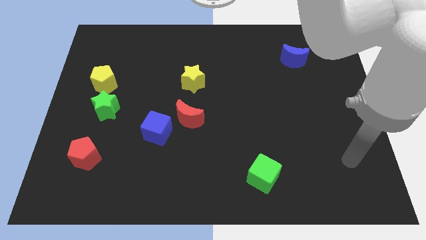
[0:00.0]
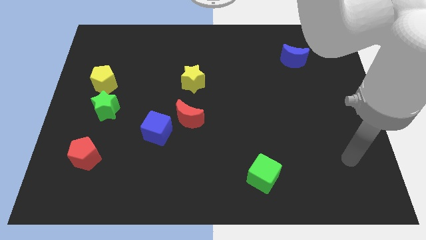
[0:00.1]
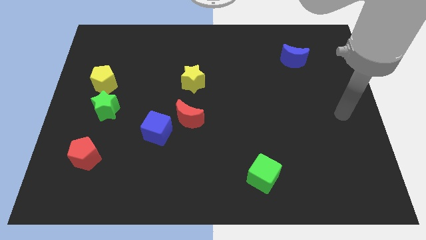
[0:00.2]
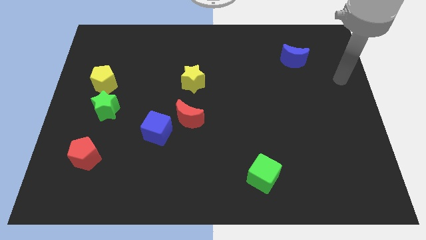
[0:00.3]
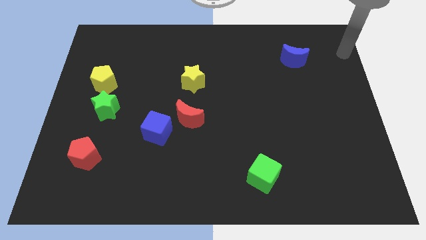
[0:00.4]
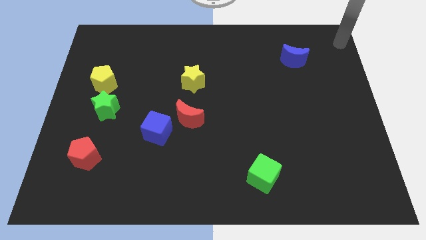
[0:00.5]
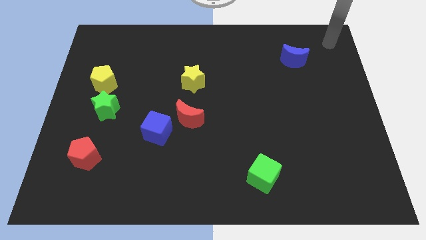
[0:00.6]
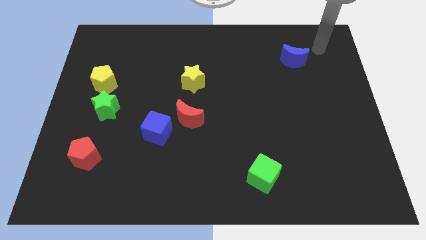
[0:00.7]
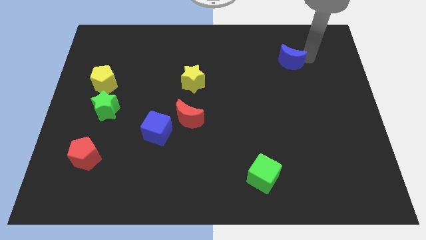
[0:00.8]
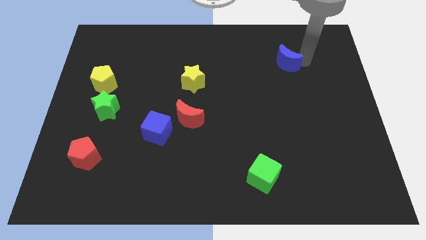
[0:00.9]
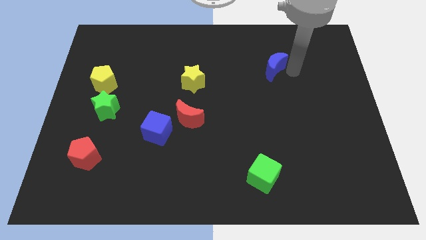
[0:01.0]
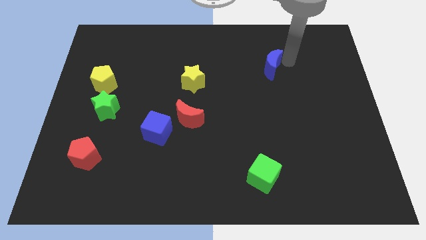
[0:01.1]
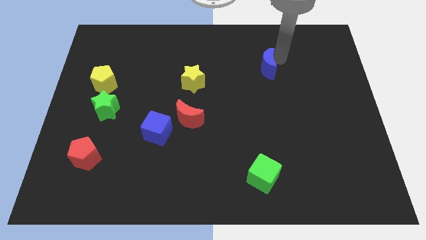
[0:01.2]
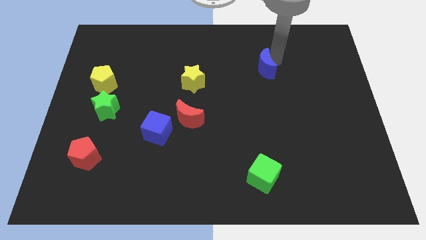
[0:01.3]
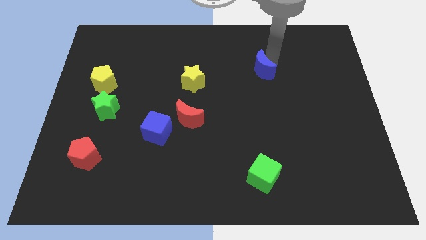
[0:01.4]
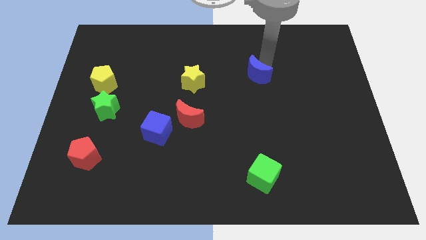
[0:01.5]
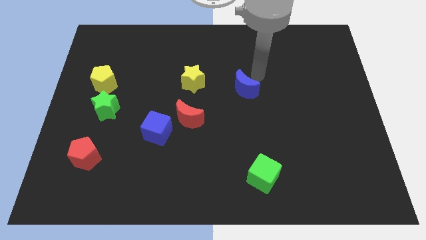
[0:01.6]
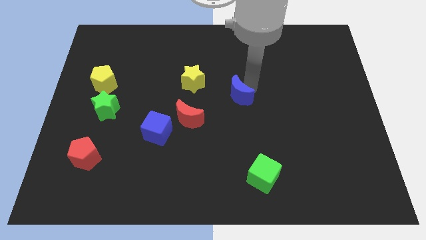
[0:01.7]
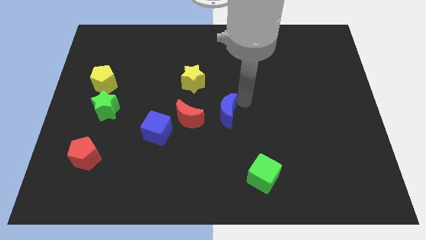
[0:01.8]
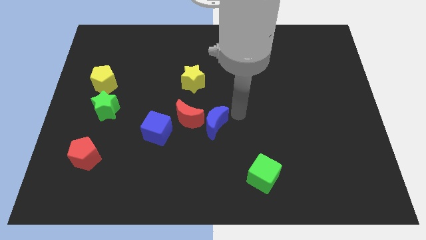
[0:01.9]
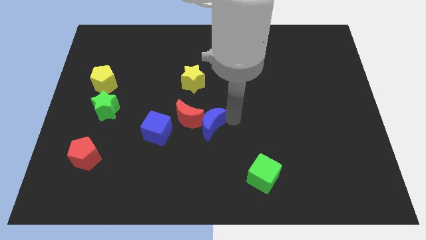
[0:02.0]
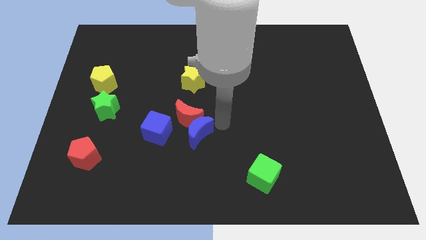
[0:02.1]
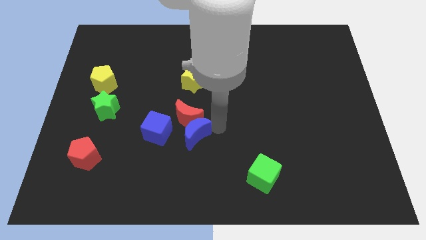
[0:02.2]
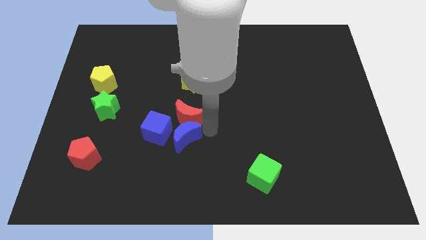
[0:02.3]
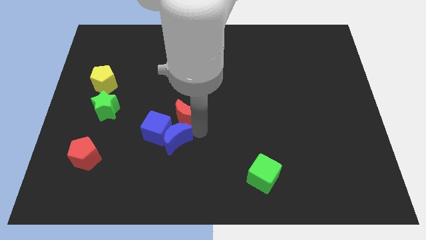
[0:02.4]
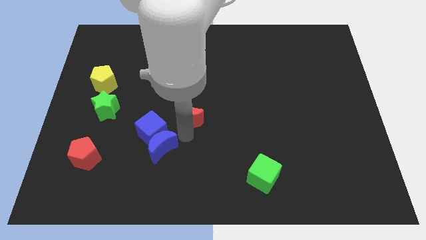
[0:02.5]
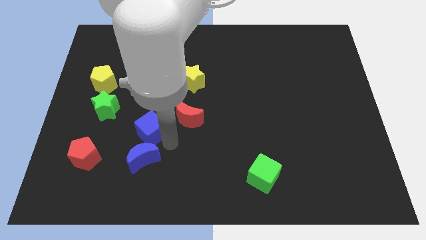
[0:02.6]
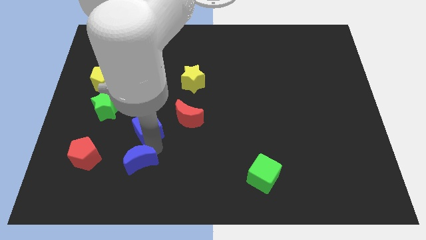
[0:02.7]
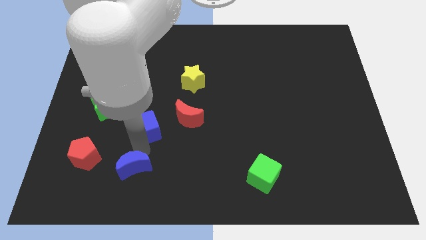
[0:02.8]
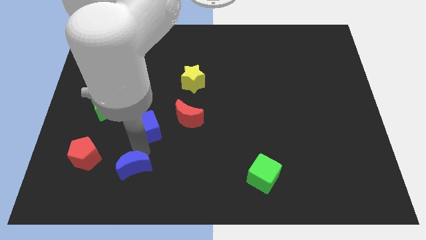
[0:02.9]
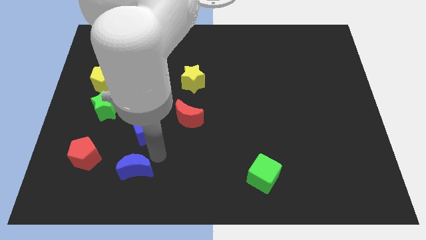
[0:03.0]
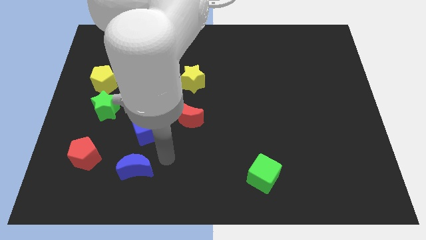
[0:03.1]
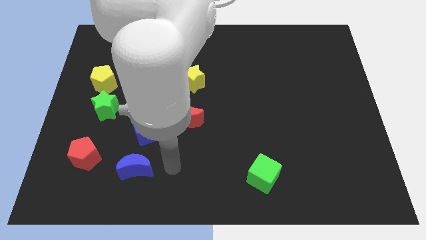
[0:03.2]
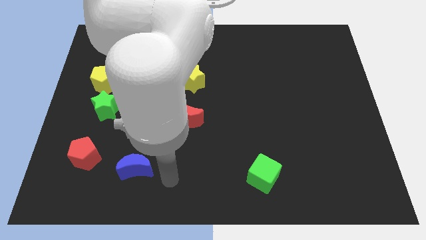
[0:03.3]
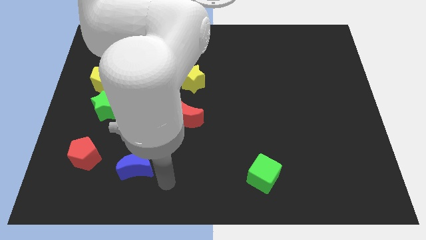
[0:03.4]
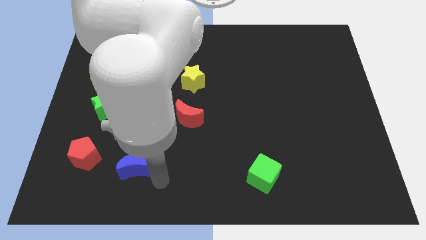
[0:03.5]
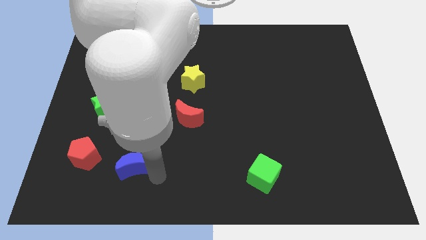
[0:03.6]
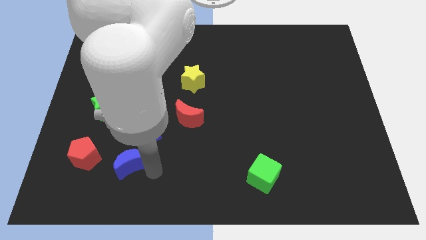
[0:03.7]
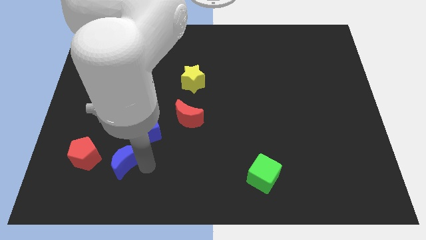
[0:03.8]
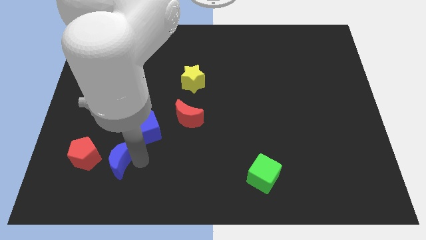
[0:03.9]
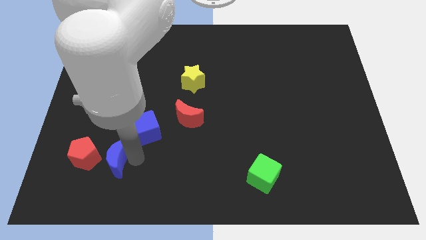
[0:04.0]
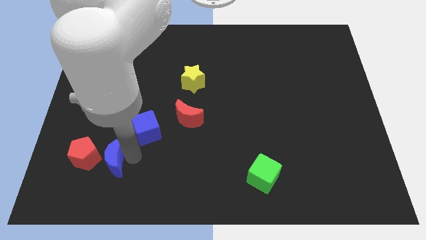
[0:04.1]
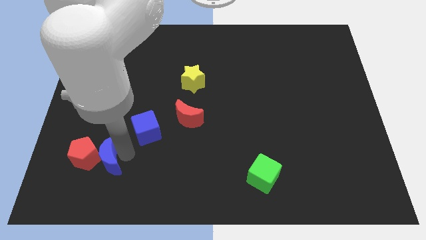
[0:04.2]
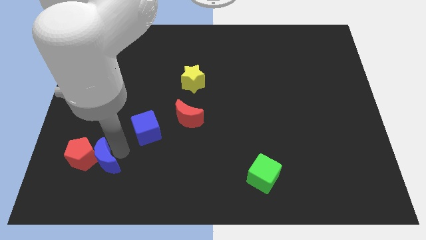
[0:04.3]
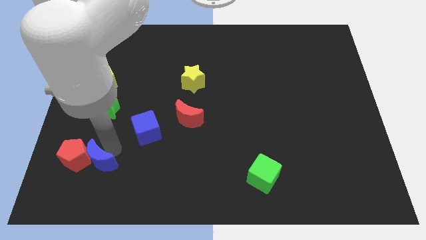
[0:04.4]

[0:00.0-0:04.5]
put the blue moon next to the red pentagon

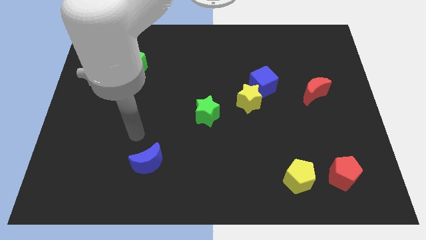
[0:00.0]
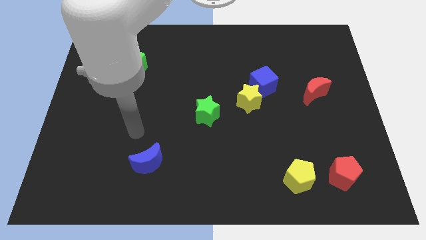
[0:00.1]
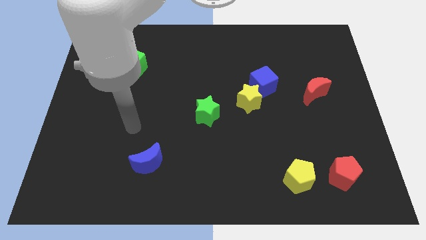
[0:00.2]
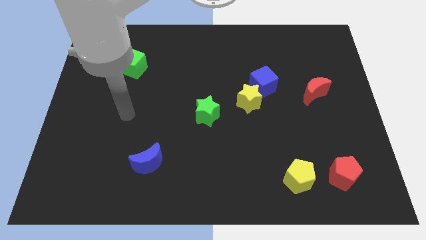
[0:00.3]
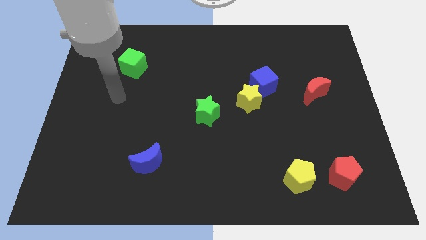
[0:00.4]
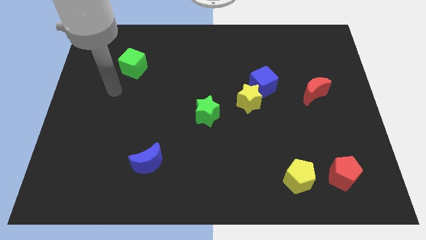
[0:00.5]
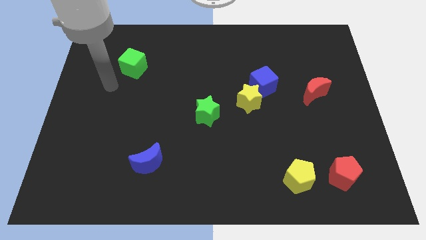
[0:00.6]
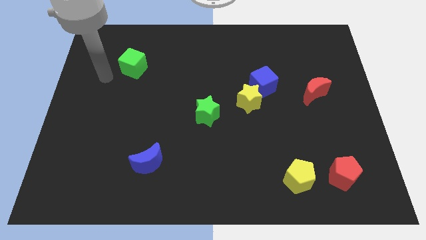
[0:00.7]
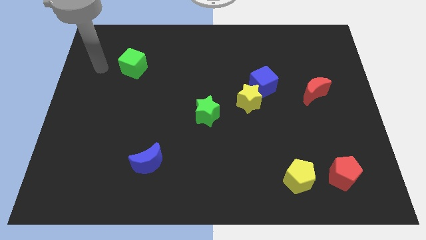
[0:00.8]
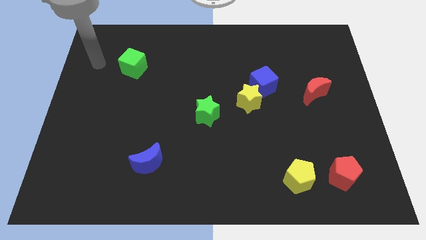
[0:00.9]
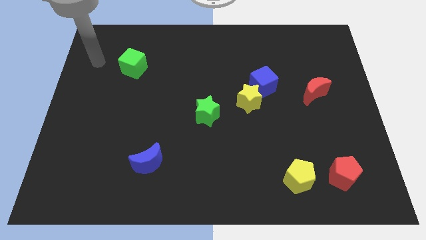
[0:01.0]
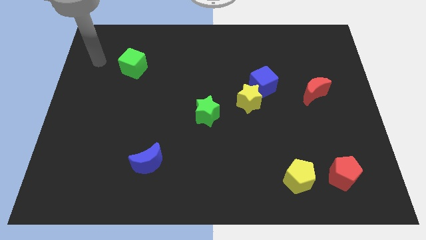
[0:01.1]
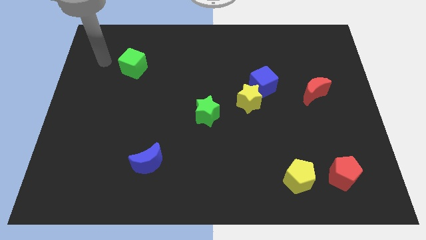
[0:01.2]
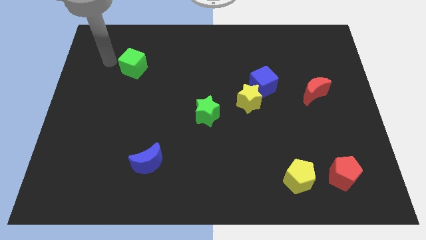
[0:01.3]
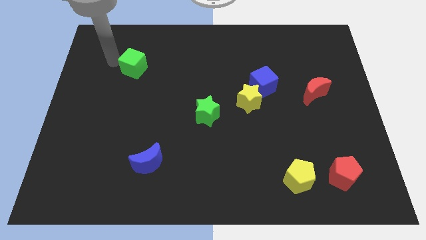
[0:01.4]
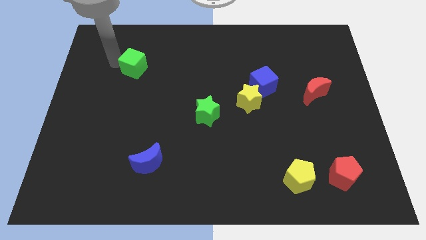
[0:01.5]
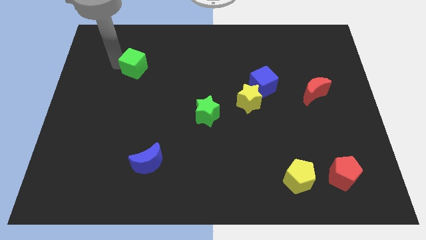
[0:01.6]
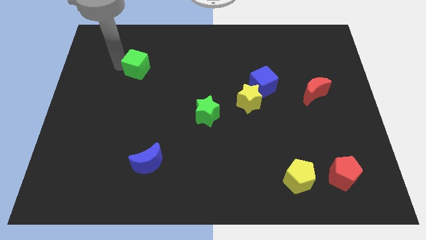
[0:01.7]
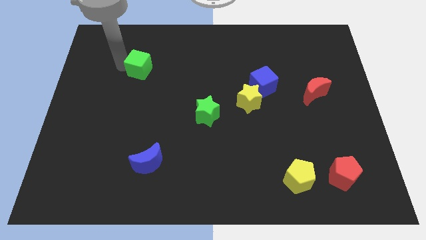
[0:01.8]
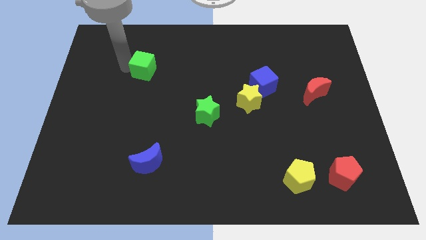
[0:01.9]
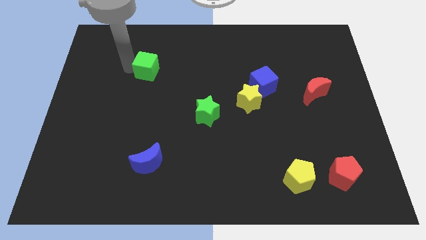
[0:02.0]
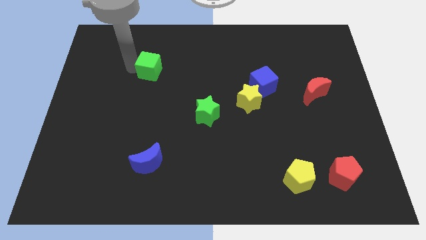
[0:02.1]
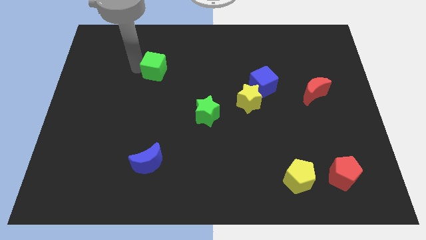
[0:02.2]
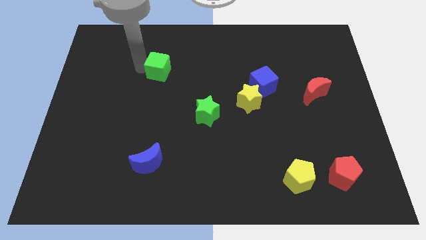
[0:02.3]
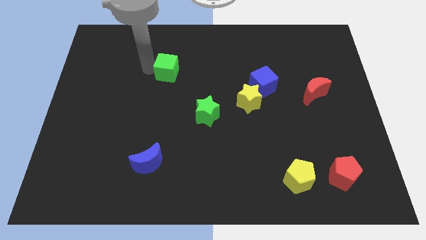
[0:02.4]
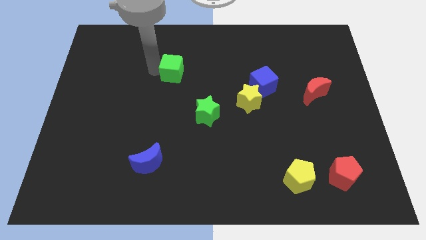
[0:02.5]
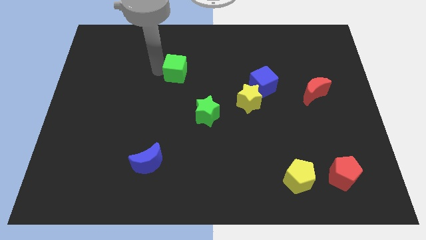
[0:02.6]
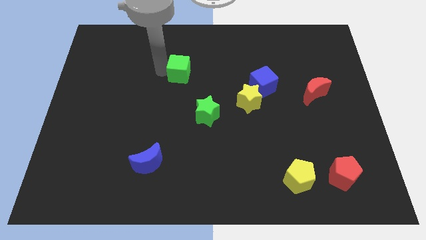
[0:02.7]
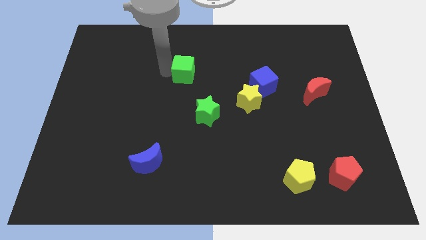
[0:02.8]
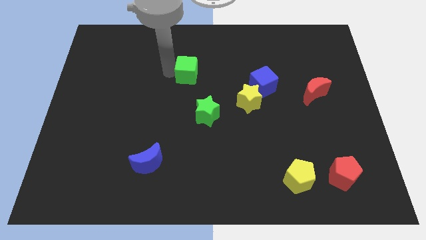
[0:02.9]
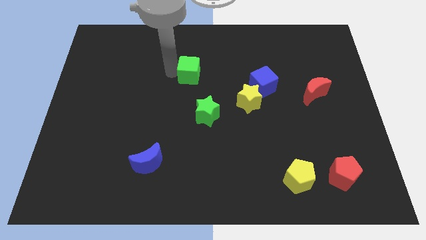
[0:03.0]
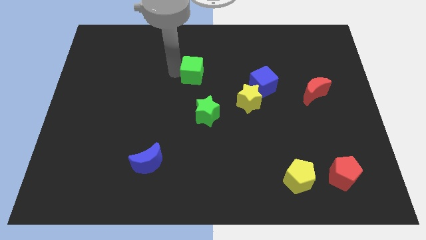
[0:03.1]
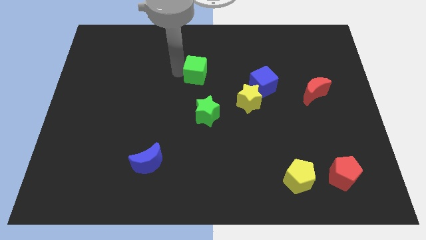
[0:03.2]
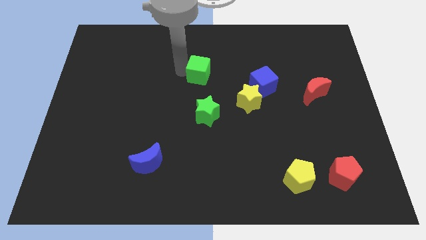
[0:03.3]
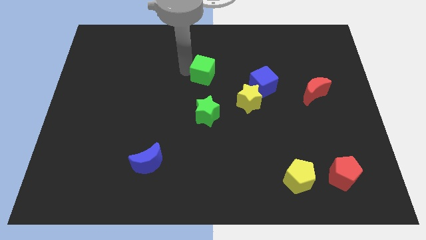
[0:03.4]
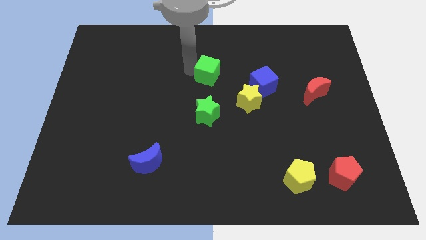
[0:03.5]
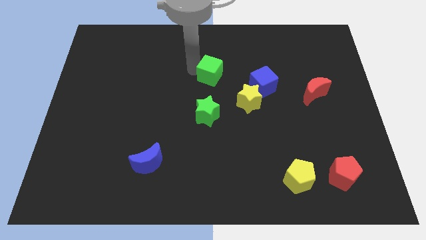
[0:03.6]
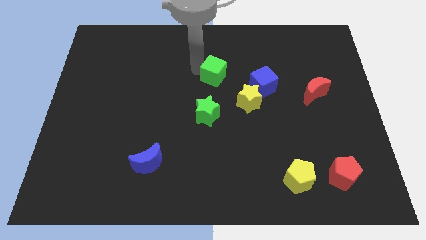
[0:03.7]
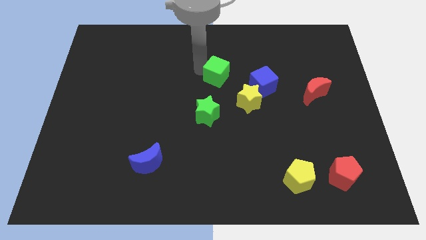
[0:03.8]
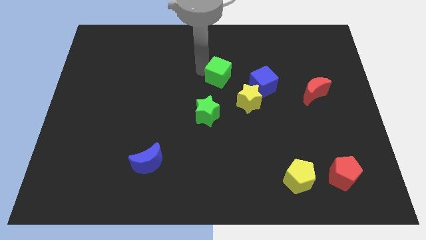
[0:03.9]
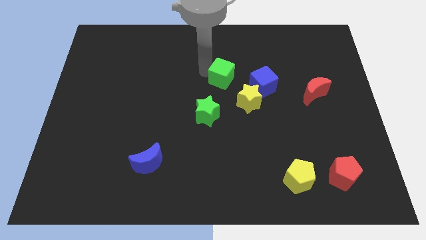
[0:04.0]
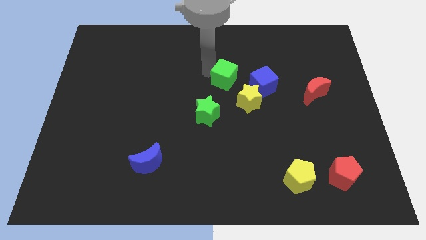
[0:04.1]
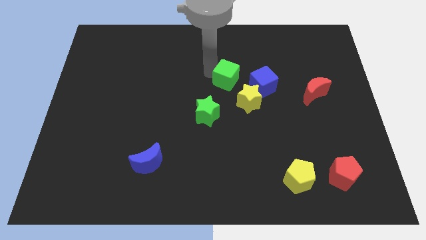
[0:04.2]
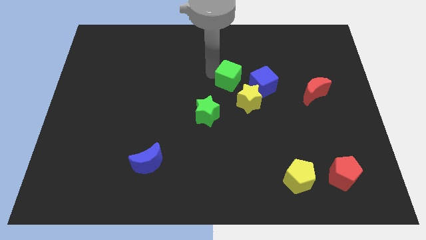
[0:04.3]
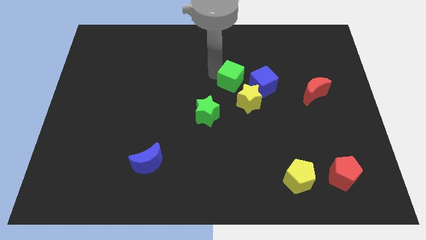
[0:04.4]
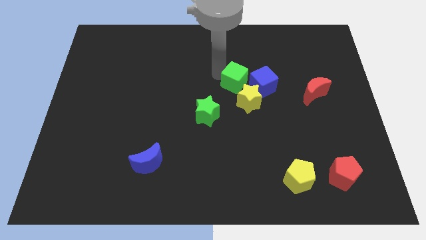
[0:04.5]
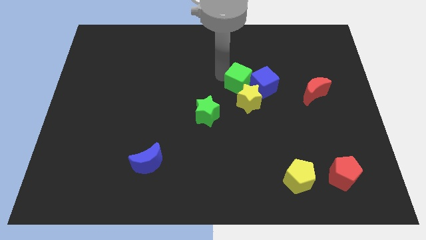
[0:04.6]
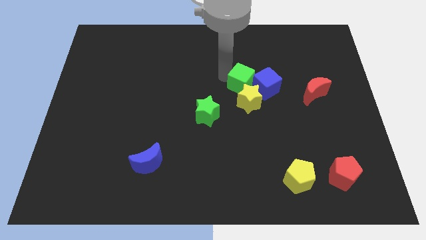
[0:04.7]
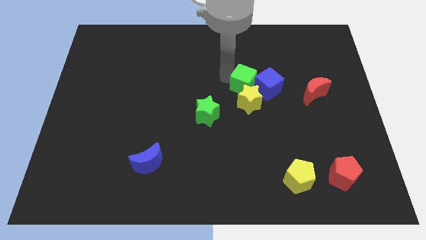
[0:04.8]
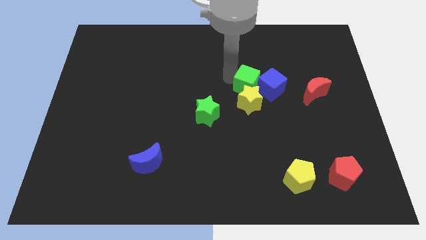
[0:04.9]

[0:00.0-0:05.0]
move the green cube towards the blue cube
